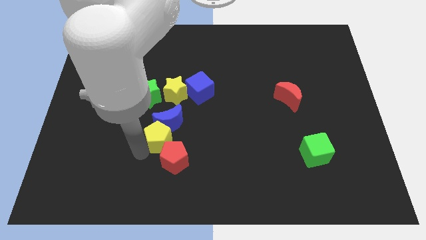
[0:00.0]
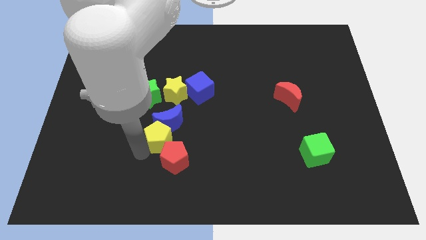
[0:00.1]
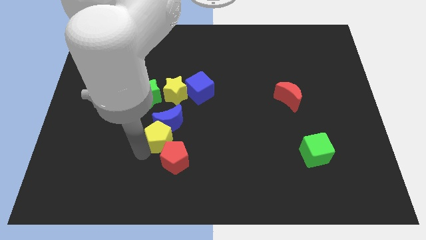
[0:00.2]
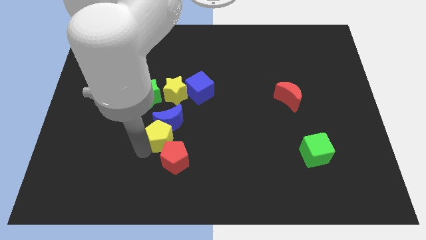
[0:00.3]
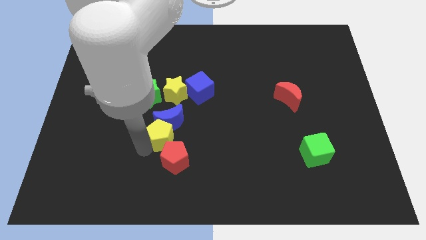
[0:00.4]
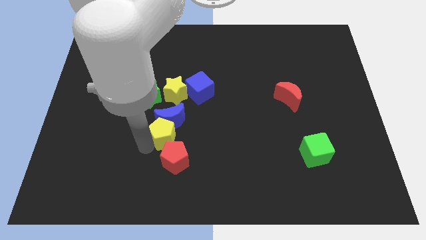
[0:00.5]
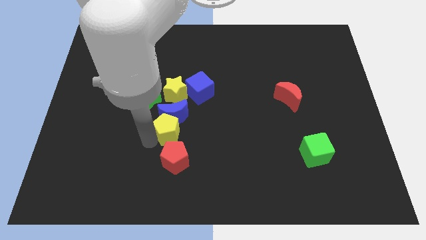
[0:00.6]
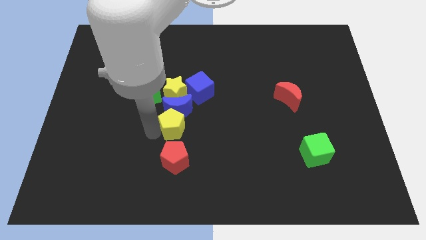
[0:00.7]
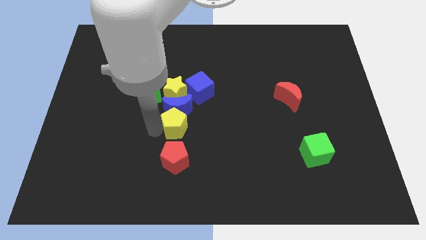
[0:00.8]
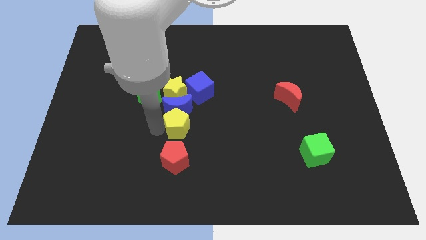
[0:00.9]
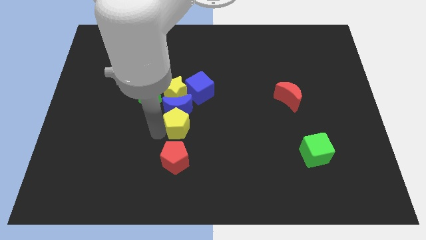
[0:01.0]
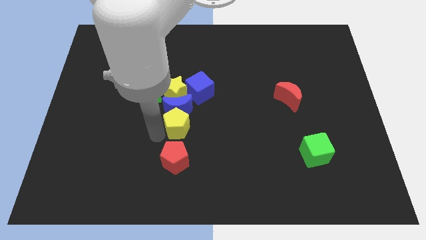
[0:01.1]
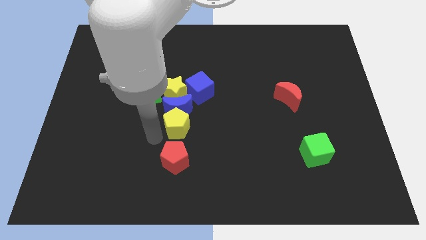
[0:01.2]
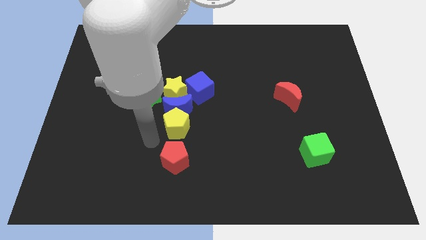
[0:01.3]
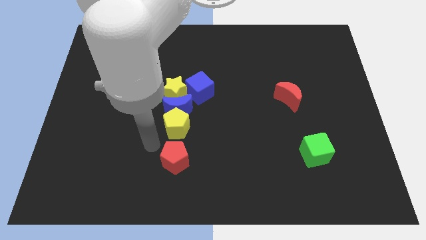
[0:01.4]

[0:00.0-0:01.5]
place yellow pentagon in between blue moon and red pentagon

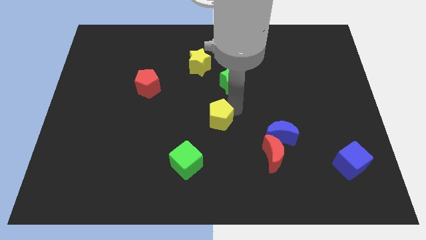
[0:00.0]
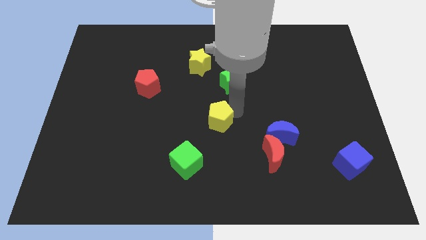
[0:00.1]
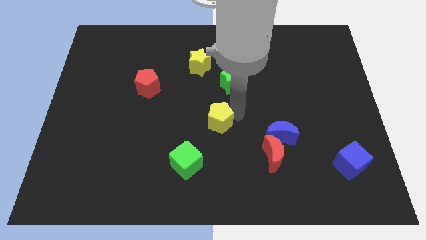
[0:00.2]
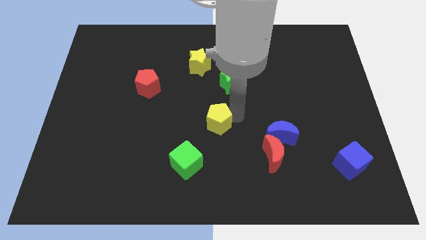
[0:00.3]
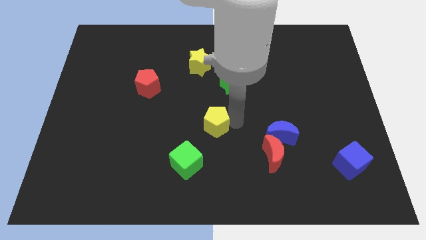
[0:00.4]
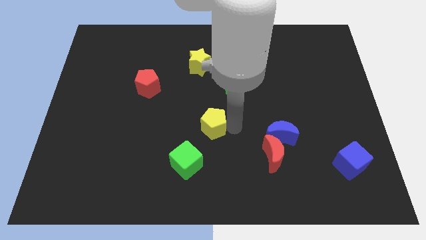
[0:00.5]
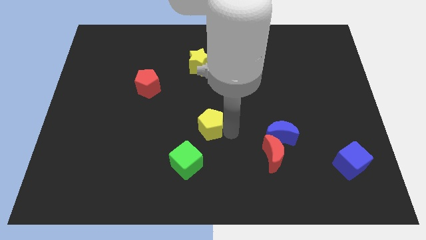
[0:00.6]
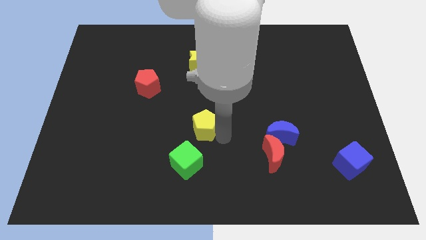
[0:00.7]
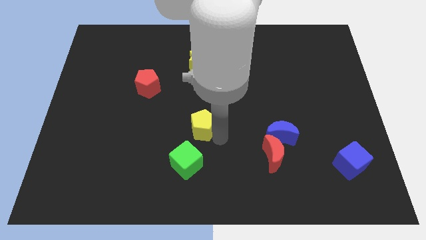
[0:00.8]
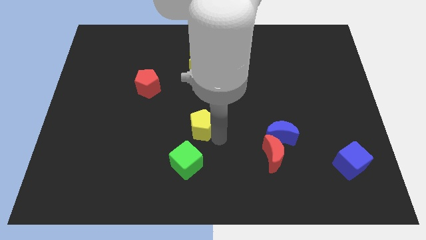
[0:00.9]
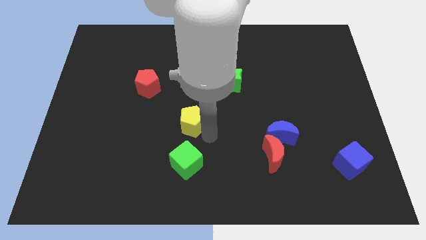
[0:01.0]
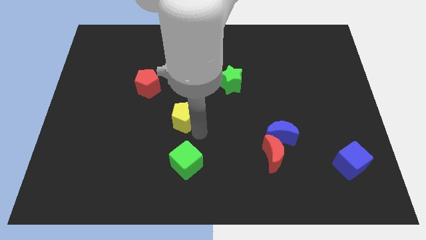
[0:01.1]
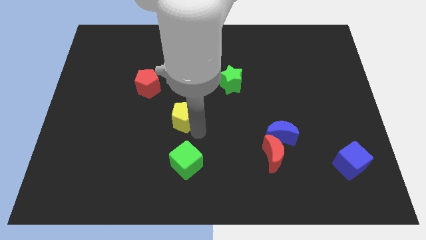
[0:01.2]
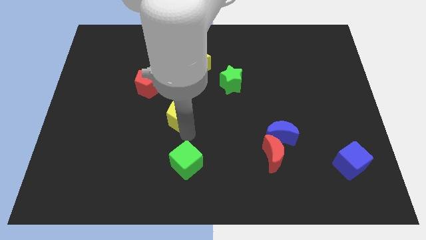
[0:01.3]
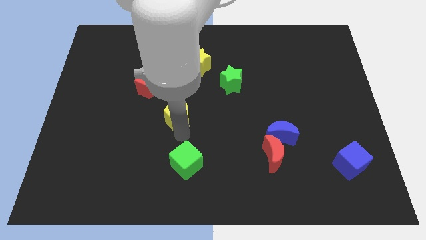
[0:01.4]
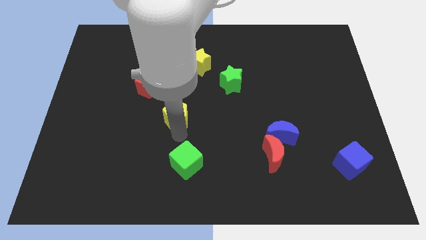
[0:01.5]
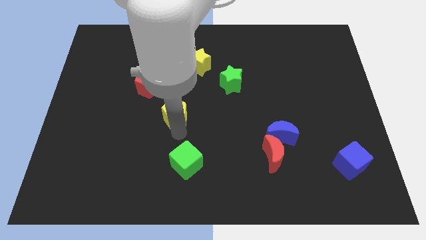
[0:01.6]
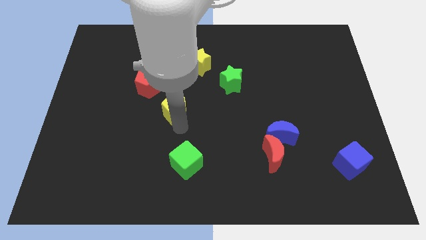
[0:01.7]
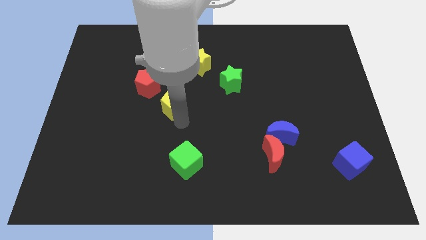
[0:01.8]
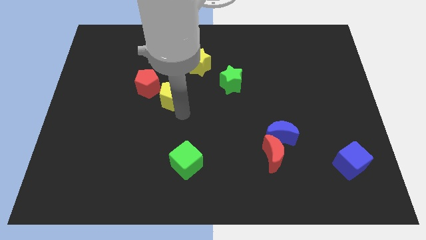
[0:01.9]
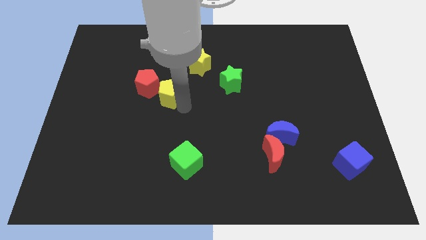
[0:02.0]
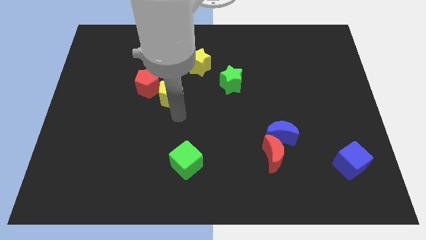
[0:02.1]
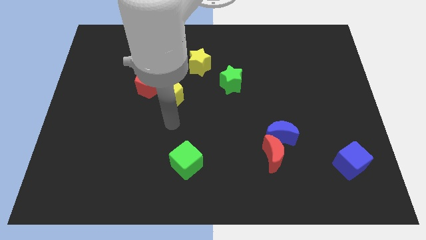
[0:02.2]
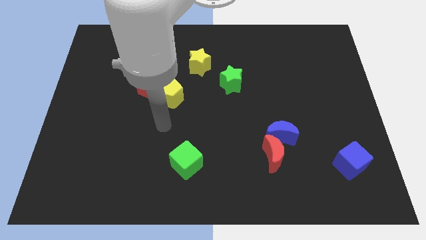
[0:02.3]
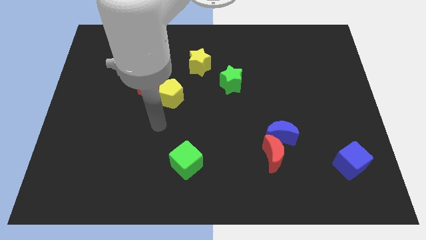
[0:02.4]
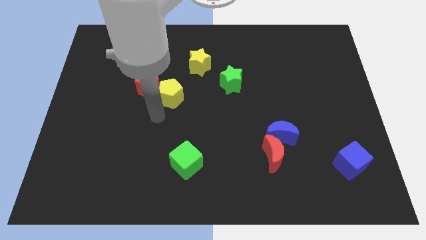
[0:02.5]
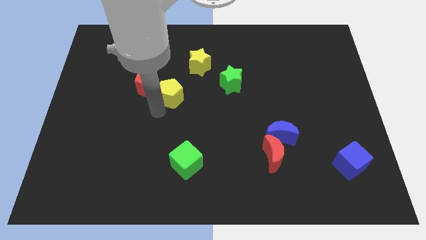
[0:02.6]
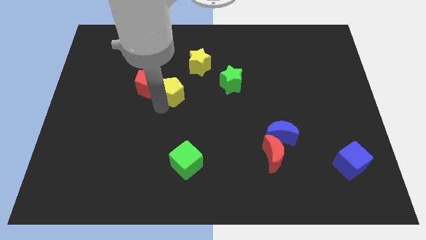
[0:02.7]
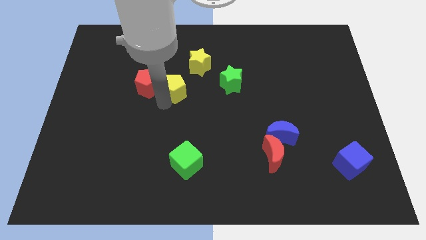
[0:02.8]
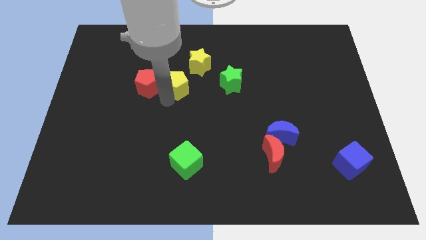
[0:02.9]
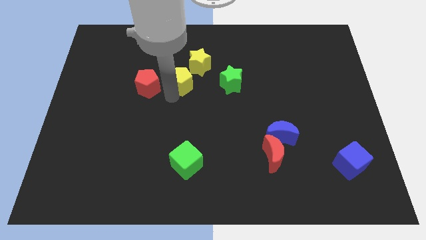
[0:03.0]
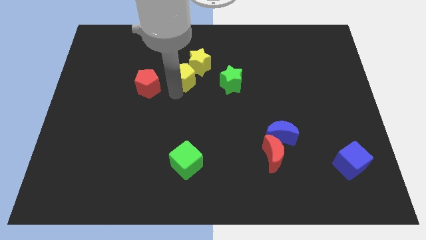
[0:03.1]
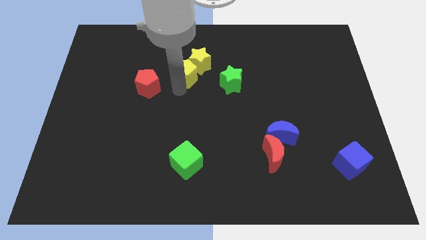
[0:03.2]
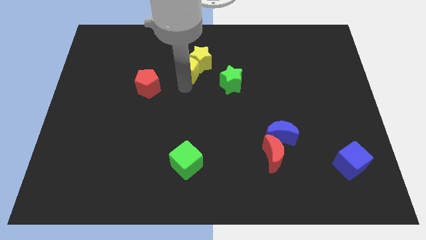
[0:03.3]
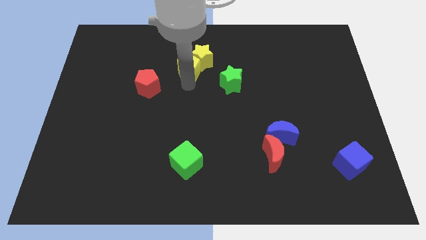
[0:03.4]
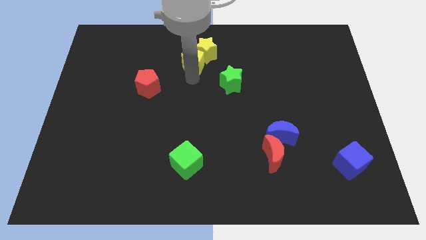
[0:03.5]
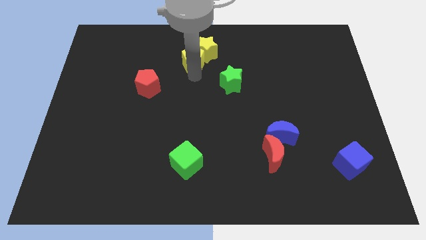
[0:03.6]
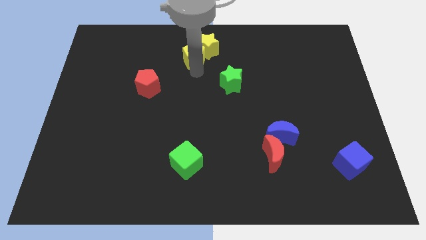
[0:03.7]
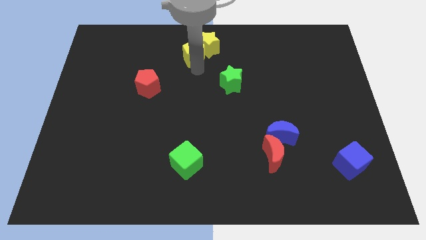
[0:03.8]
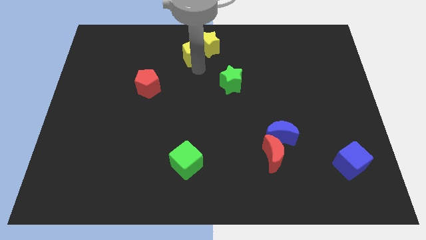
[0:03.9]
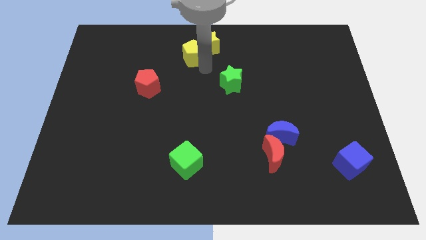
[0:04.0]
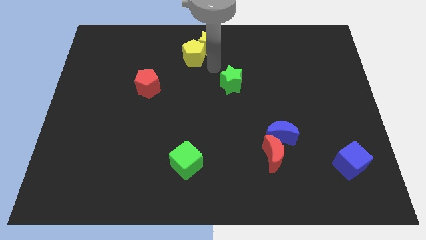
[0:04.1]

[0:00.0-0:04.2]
add yellow pentagon into yellow star

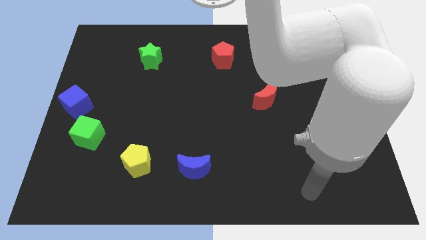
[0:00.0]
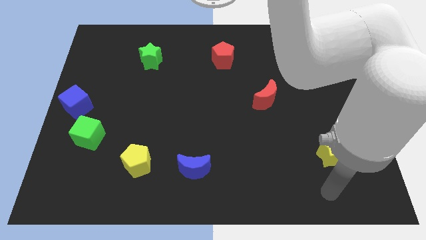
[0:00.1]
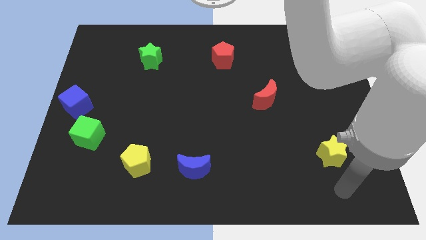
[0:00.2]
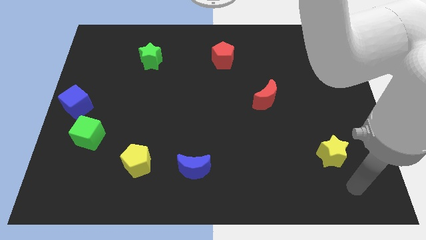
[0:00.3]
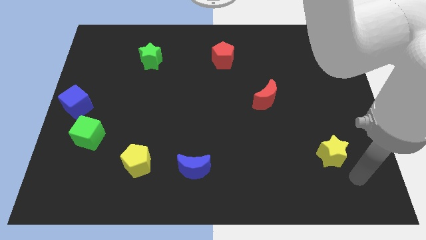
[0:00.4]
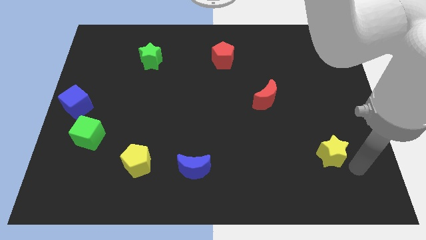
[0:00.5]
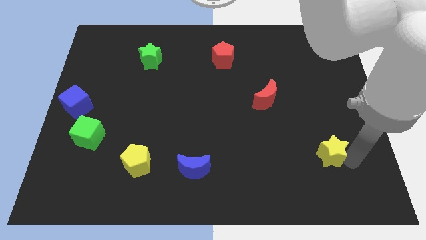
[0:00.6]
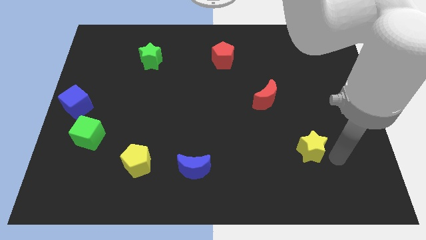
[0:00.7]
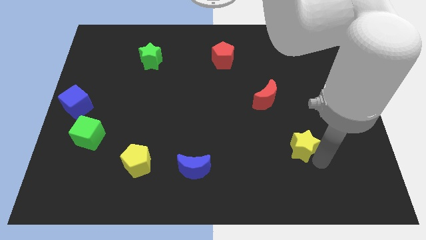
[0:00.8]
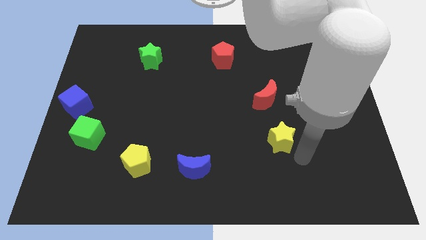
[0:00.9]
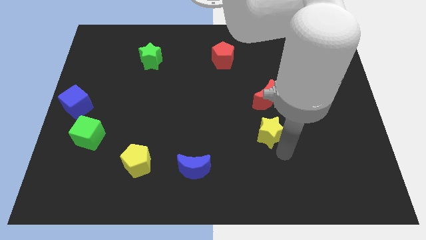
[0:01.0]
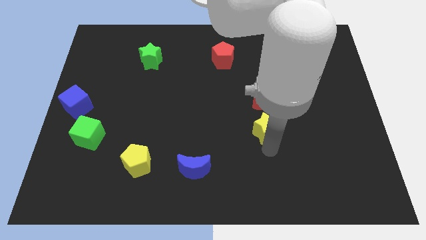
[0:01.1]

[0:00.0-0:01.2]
place the yellow star below the red crescent

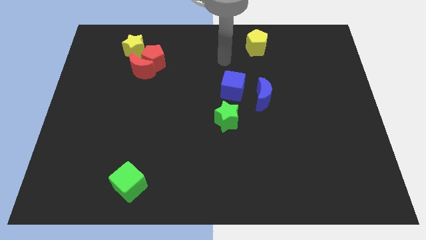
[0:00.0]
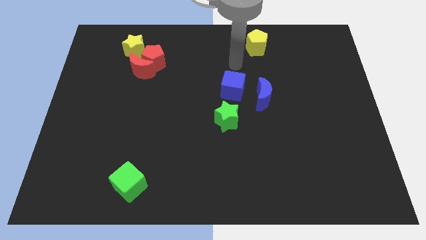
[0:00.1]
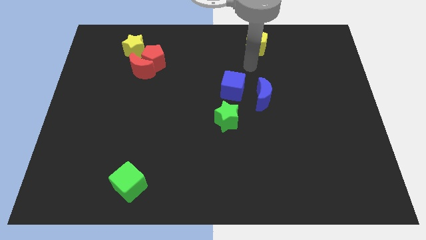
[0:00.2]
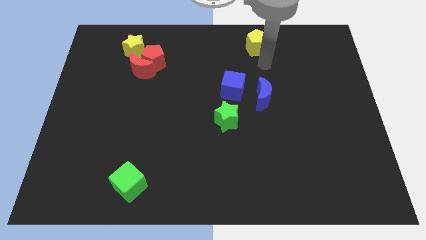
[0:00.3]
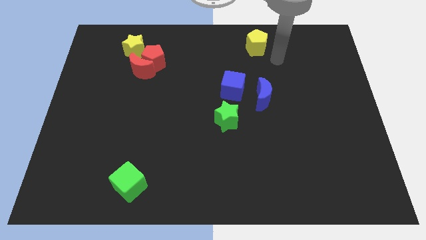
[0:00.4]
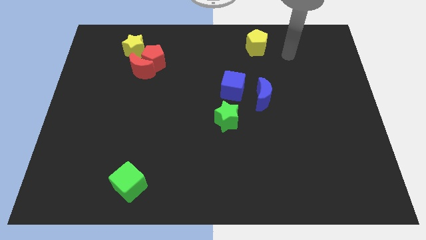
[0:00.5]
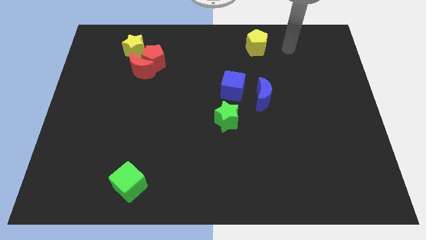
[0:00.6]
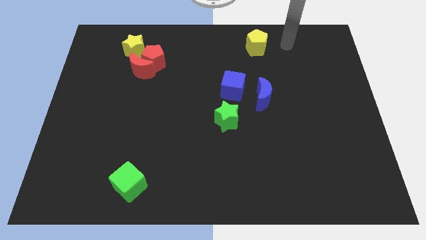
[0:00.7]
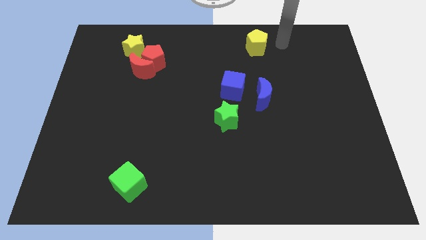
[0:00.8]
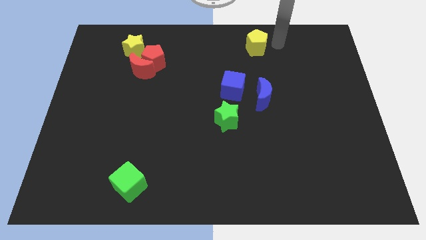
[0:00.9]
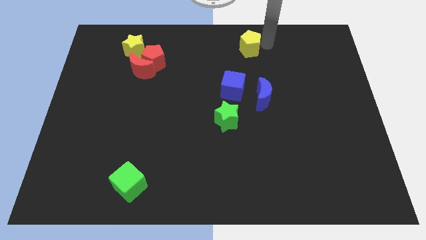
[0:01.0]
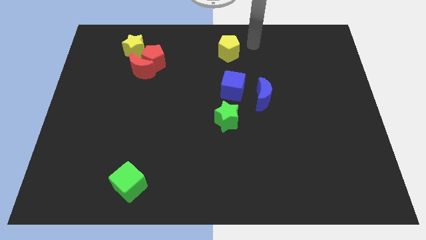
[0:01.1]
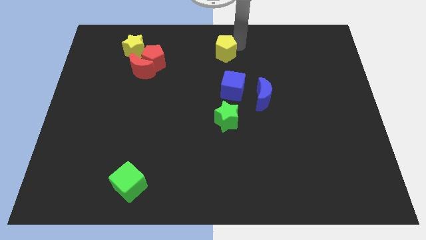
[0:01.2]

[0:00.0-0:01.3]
slide yellow pentagon to center top

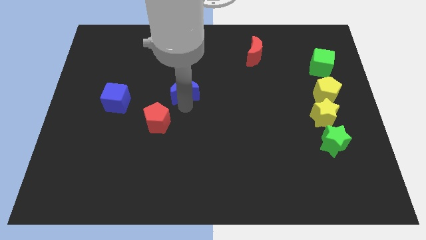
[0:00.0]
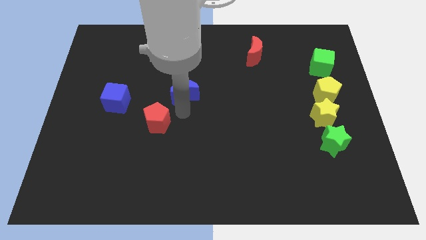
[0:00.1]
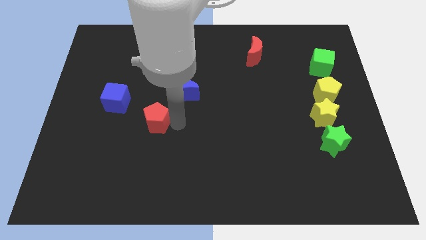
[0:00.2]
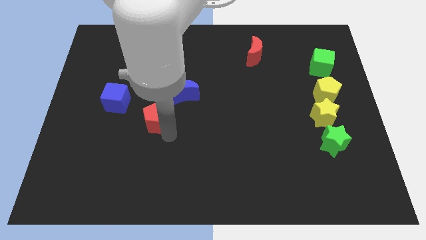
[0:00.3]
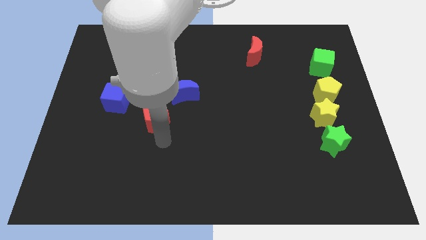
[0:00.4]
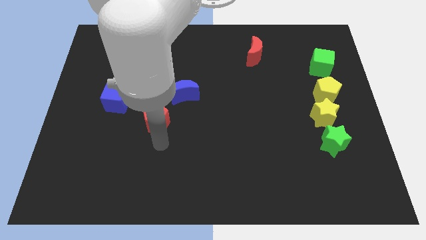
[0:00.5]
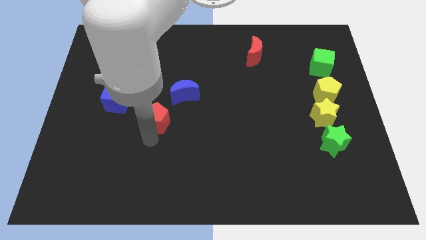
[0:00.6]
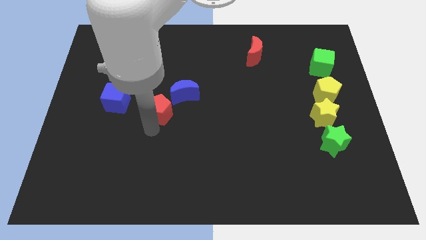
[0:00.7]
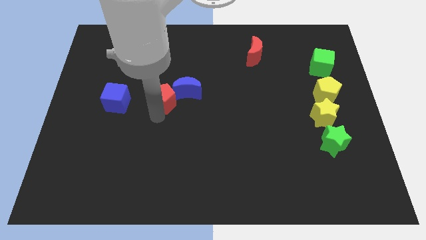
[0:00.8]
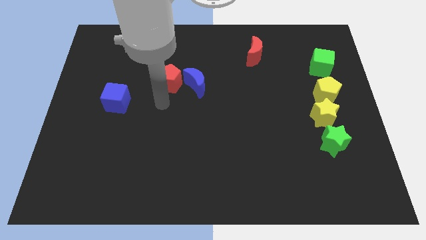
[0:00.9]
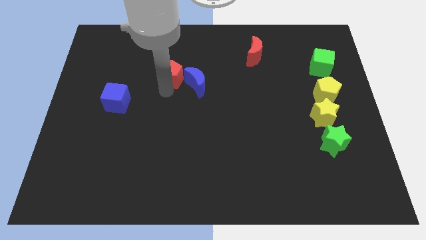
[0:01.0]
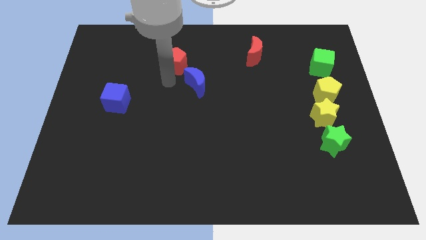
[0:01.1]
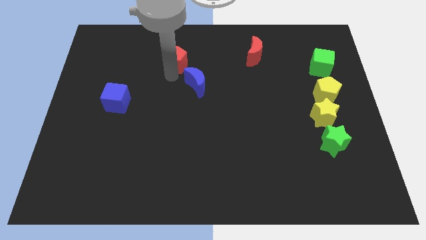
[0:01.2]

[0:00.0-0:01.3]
push the red pentagon to the top right of the blue cube
